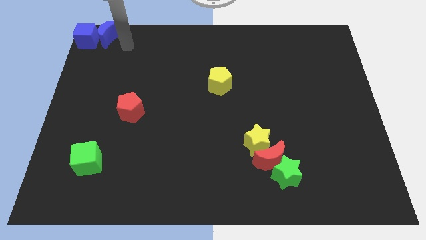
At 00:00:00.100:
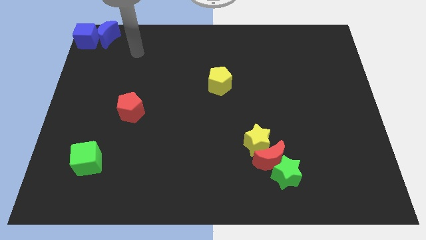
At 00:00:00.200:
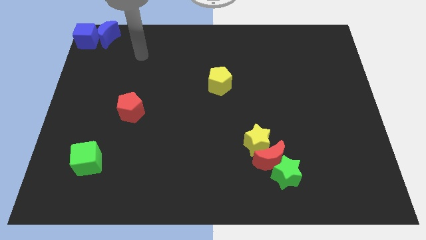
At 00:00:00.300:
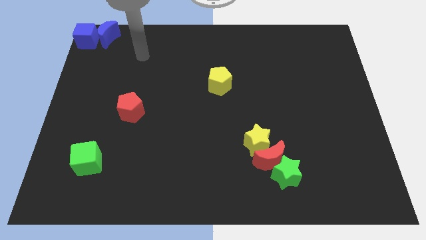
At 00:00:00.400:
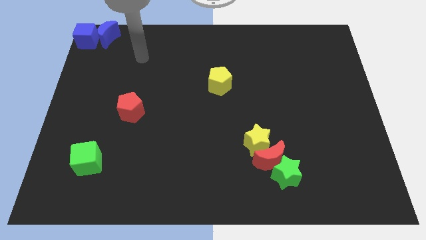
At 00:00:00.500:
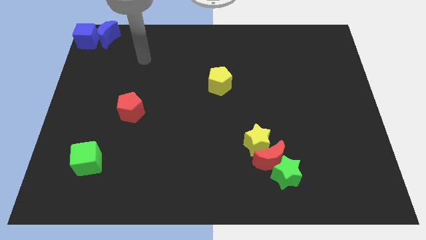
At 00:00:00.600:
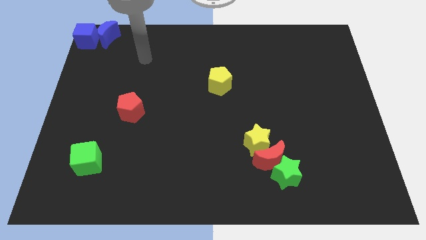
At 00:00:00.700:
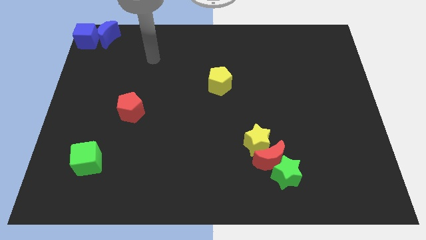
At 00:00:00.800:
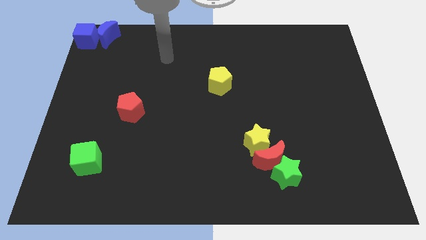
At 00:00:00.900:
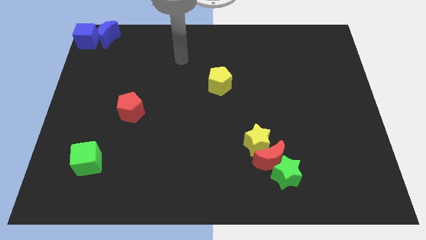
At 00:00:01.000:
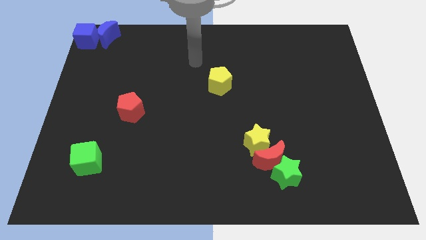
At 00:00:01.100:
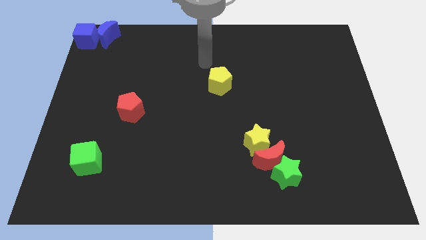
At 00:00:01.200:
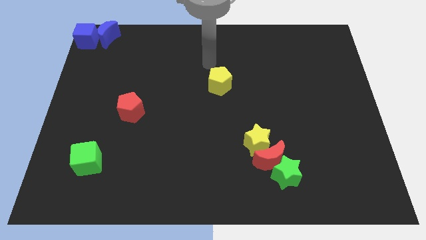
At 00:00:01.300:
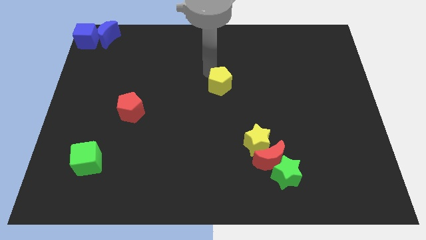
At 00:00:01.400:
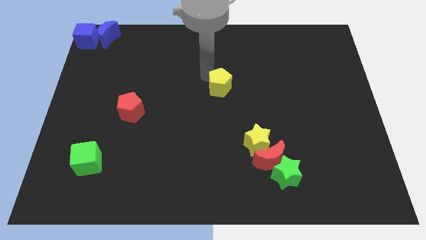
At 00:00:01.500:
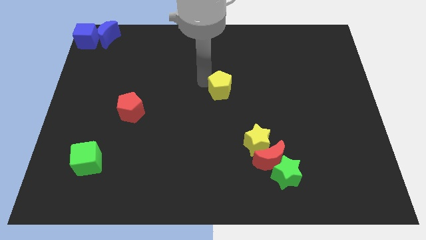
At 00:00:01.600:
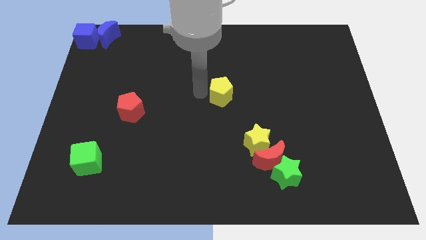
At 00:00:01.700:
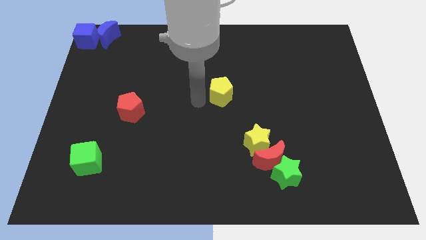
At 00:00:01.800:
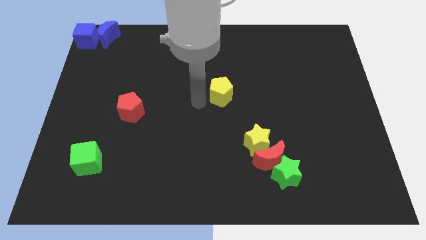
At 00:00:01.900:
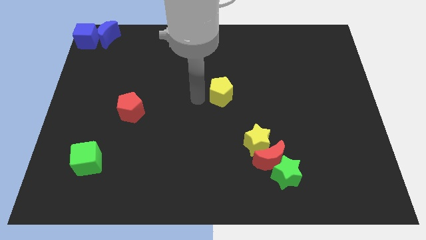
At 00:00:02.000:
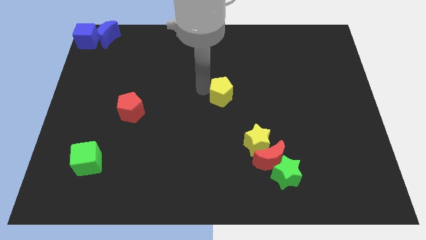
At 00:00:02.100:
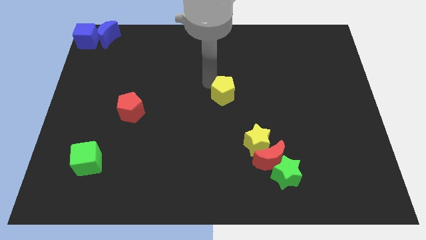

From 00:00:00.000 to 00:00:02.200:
slightly push the yellow pentagon downwards

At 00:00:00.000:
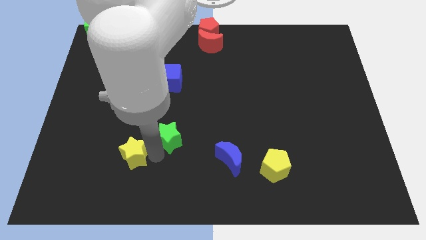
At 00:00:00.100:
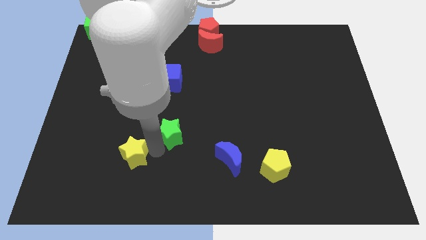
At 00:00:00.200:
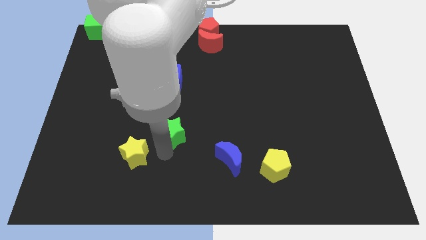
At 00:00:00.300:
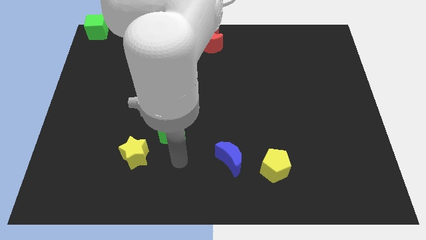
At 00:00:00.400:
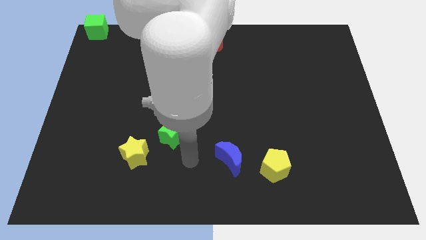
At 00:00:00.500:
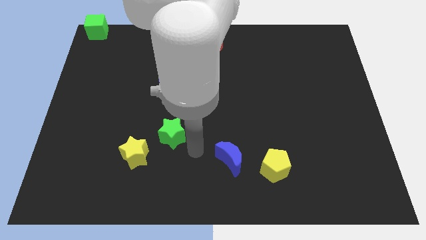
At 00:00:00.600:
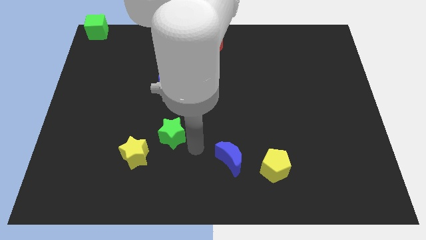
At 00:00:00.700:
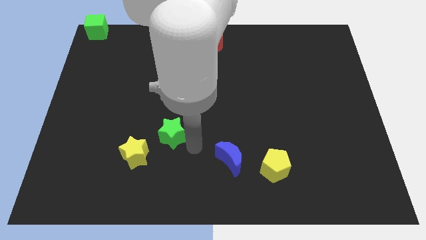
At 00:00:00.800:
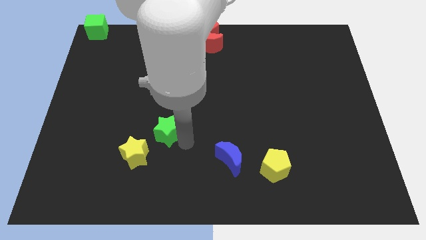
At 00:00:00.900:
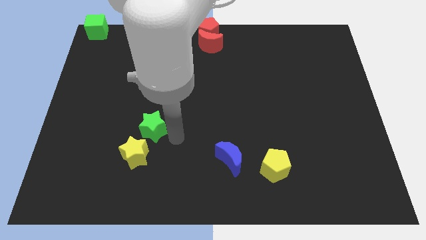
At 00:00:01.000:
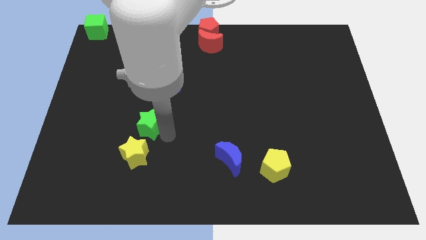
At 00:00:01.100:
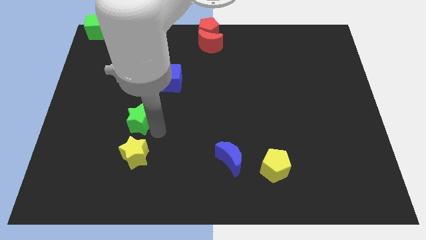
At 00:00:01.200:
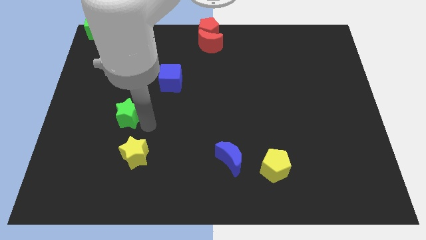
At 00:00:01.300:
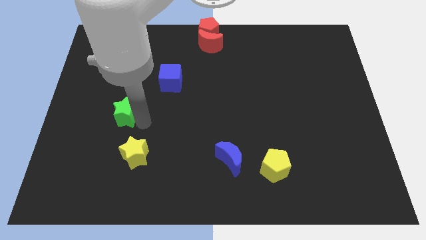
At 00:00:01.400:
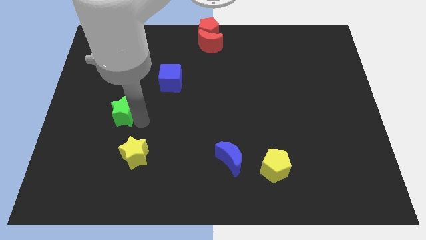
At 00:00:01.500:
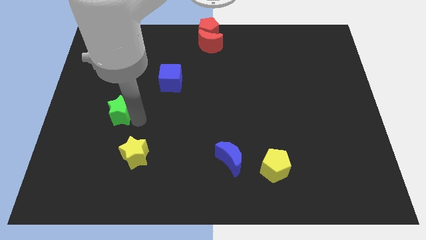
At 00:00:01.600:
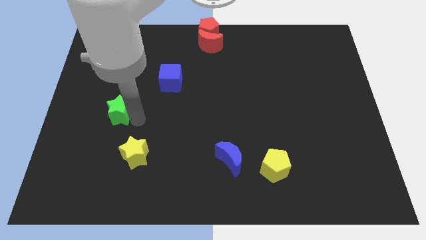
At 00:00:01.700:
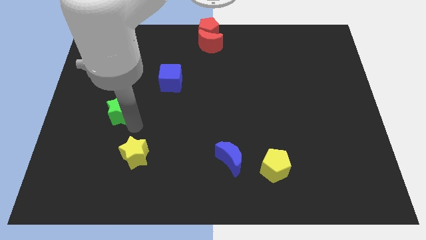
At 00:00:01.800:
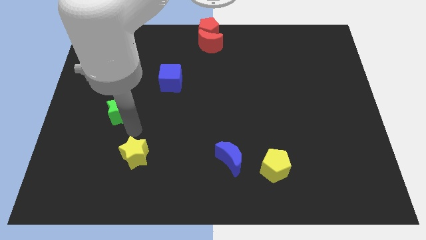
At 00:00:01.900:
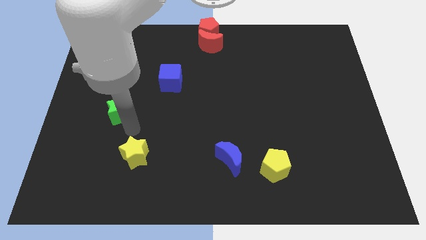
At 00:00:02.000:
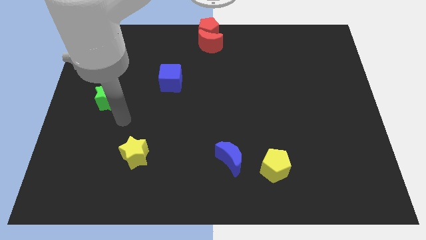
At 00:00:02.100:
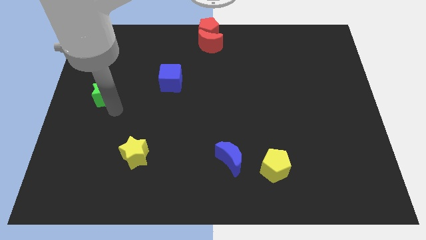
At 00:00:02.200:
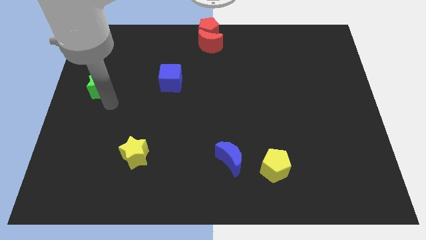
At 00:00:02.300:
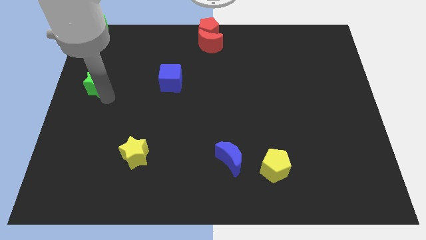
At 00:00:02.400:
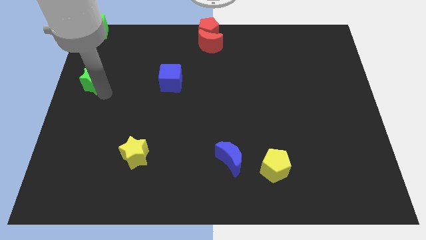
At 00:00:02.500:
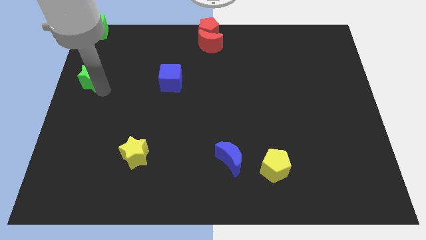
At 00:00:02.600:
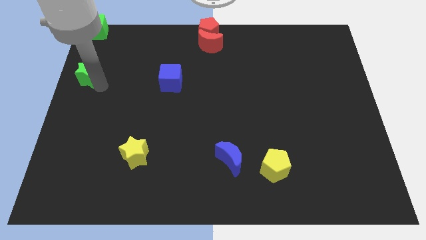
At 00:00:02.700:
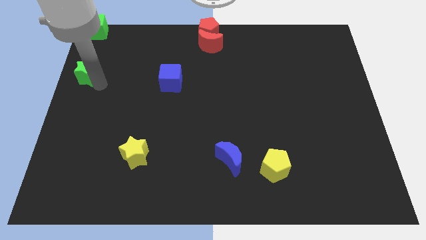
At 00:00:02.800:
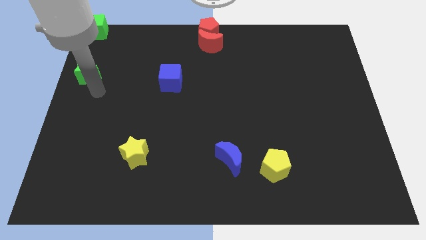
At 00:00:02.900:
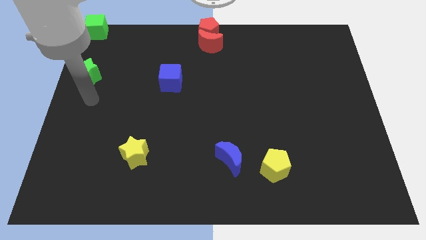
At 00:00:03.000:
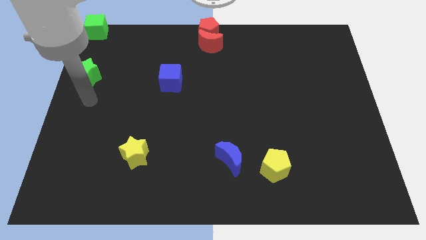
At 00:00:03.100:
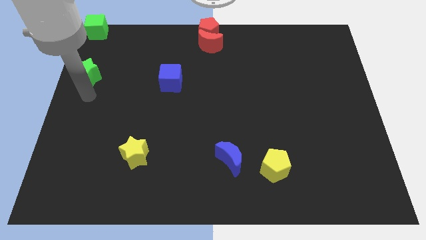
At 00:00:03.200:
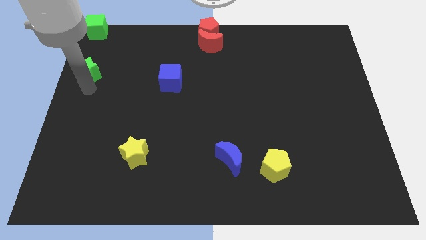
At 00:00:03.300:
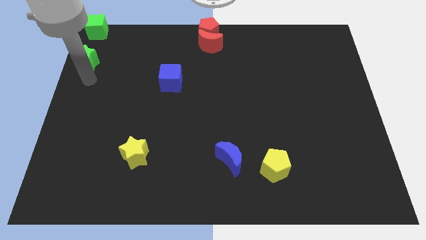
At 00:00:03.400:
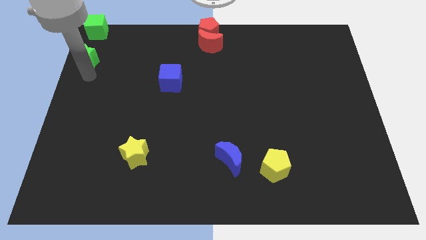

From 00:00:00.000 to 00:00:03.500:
move green star towards green cube

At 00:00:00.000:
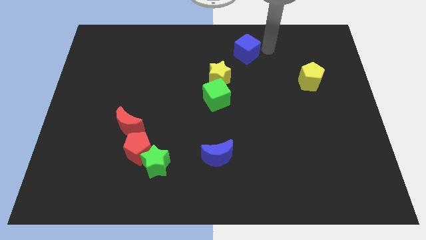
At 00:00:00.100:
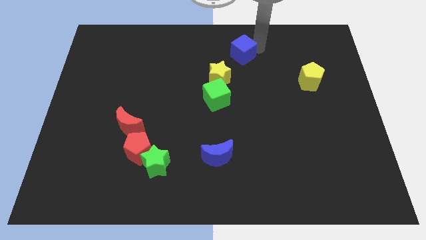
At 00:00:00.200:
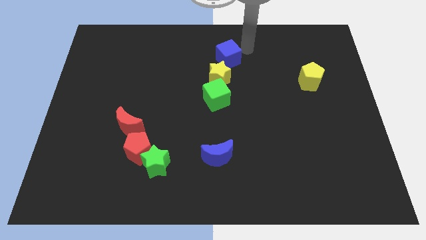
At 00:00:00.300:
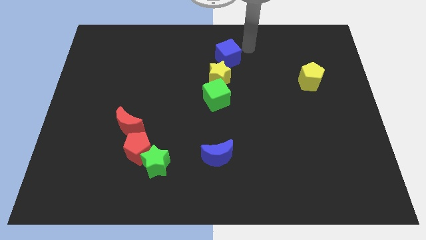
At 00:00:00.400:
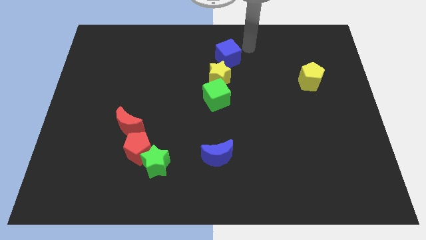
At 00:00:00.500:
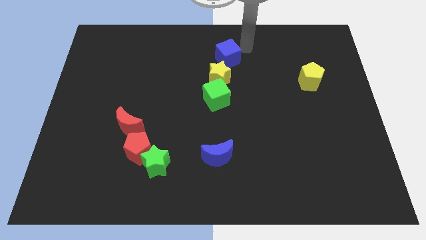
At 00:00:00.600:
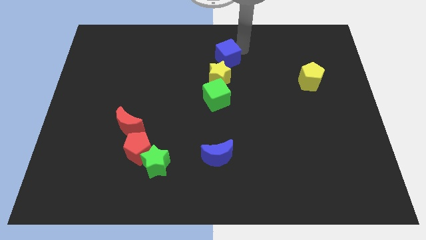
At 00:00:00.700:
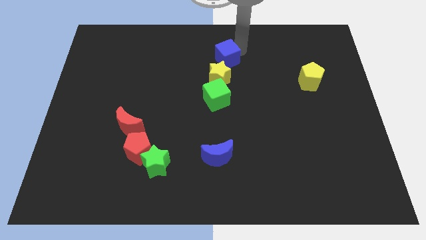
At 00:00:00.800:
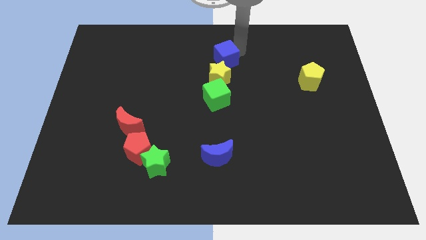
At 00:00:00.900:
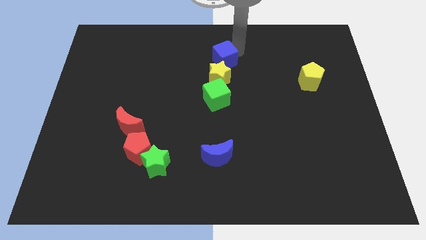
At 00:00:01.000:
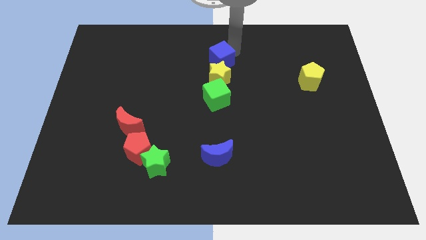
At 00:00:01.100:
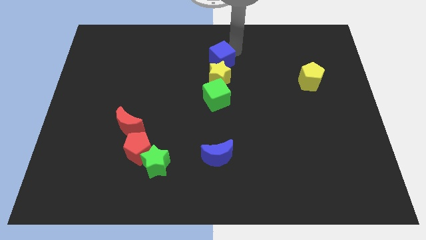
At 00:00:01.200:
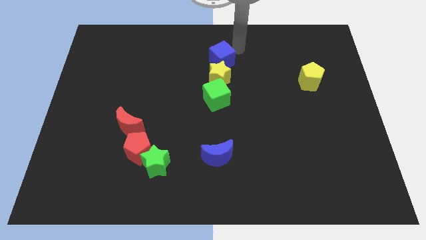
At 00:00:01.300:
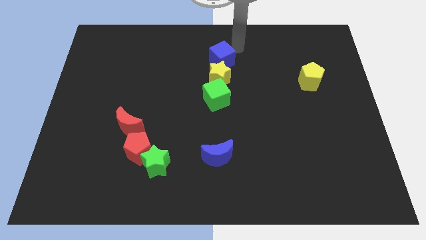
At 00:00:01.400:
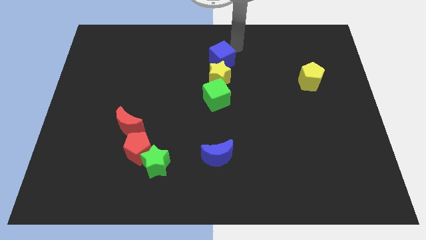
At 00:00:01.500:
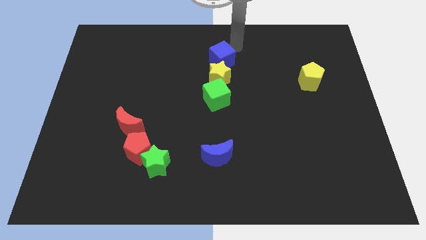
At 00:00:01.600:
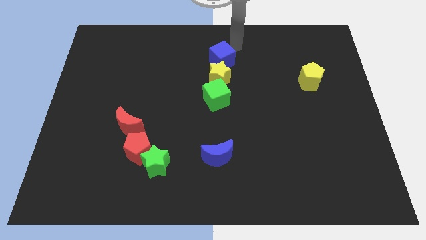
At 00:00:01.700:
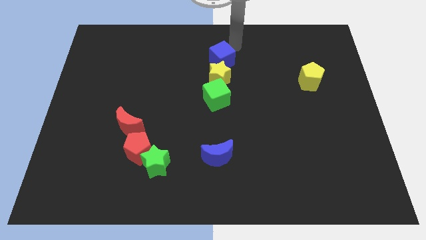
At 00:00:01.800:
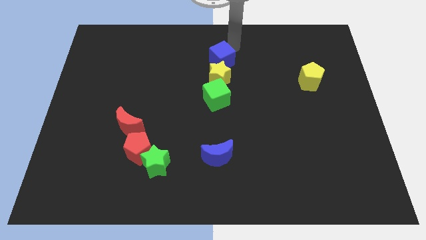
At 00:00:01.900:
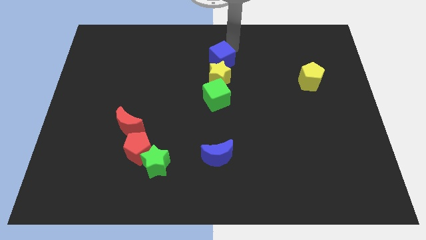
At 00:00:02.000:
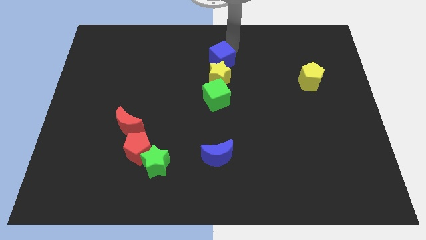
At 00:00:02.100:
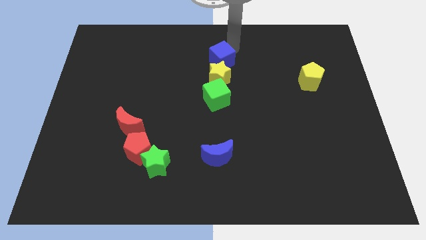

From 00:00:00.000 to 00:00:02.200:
place the blue cube above the yellow star

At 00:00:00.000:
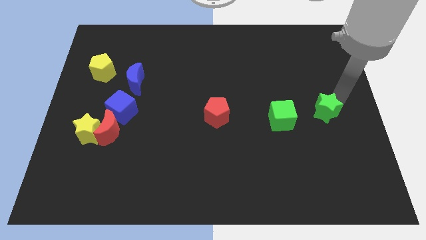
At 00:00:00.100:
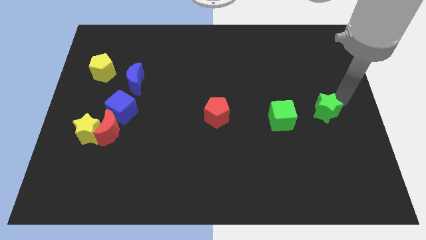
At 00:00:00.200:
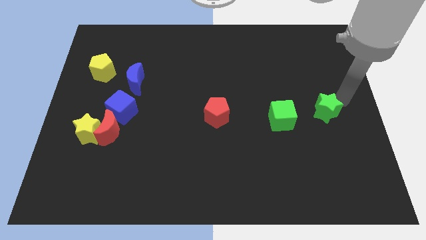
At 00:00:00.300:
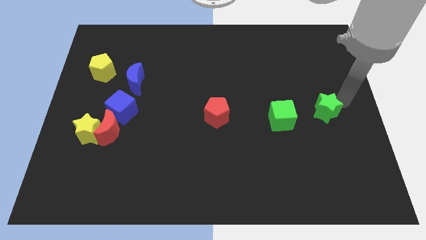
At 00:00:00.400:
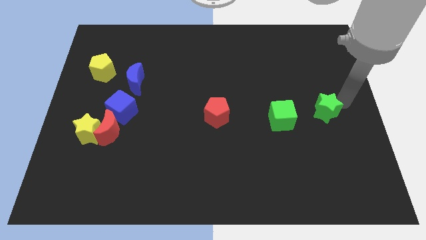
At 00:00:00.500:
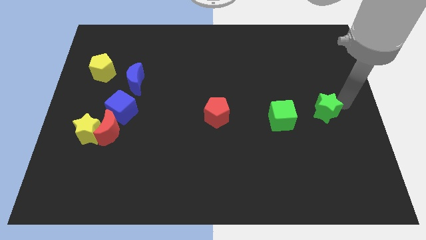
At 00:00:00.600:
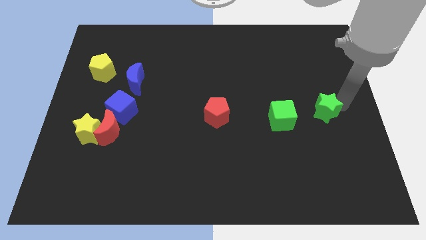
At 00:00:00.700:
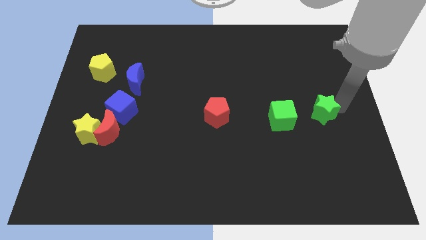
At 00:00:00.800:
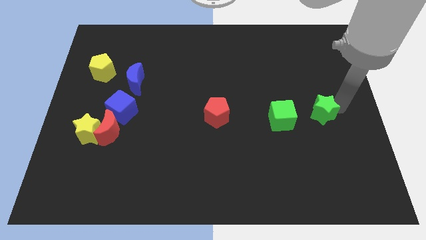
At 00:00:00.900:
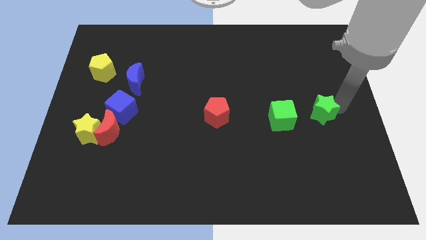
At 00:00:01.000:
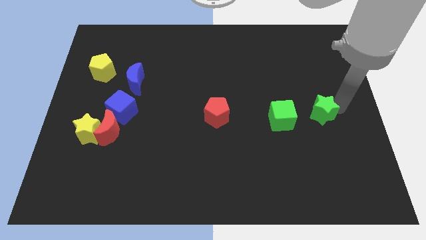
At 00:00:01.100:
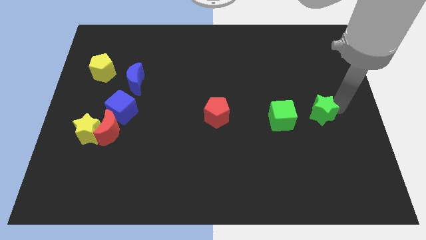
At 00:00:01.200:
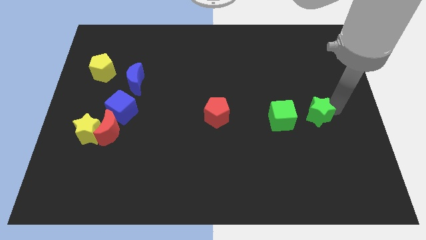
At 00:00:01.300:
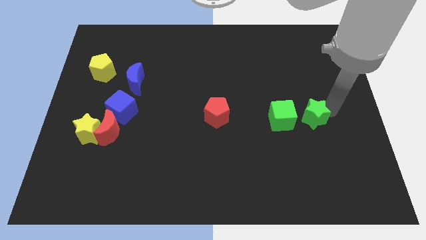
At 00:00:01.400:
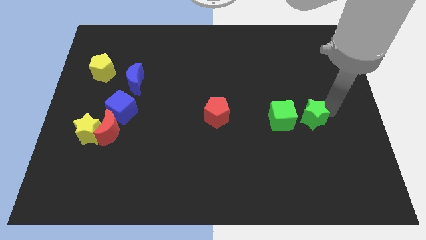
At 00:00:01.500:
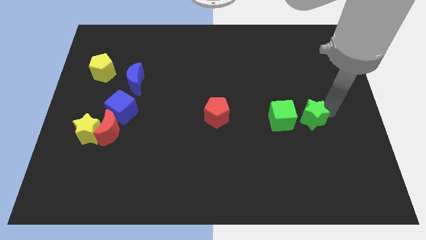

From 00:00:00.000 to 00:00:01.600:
push the green star to the right side of the green cube
